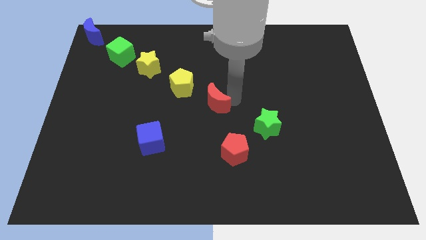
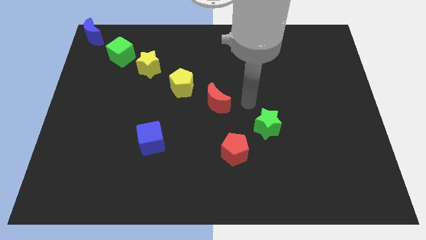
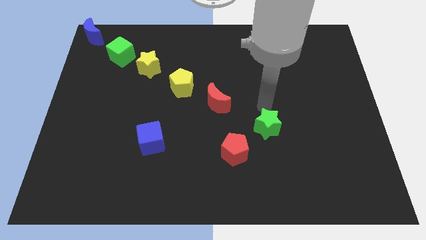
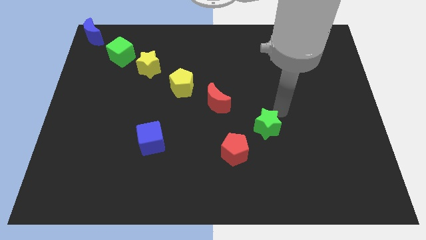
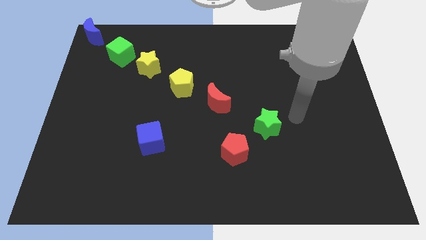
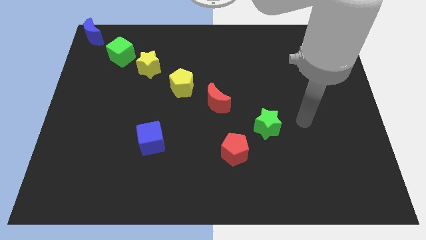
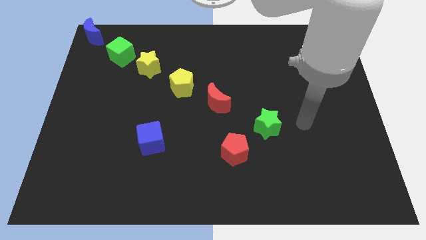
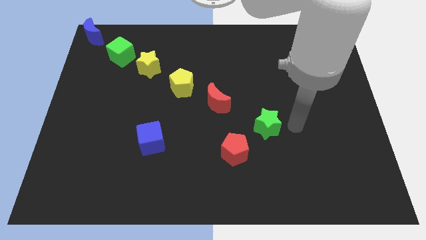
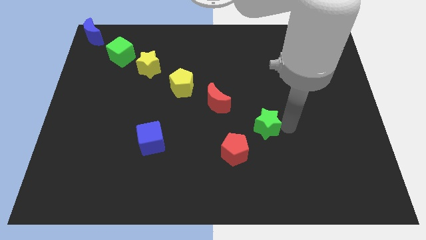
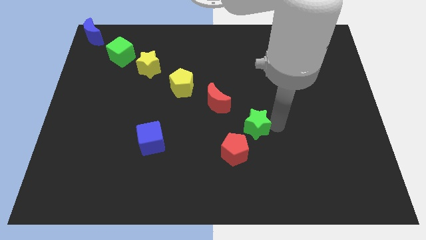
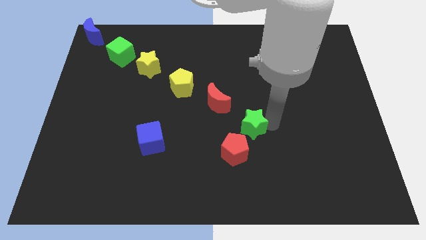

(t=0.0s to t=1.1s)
move the arm to the right of green star

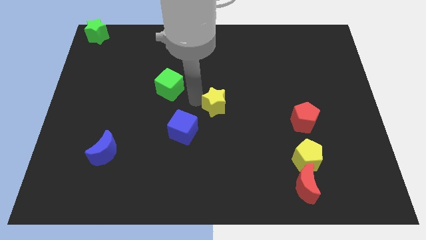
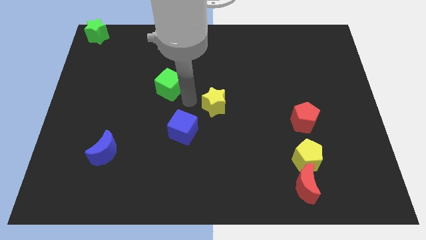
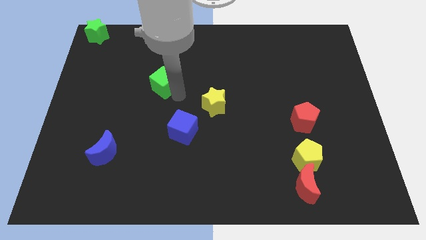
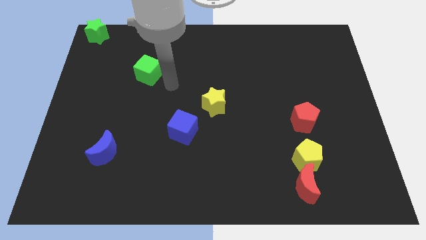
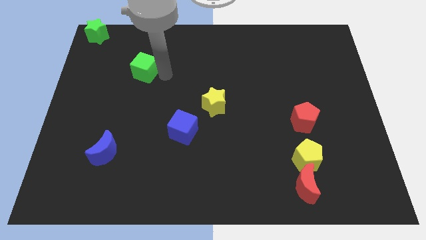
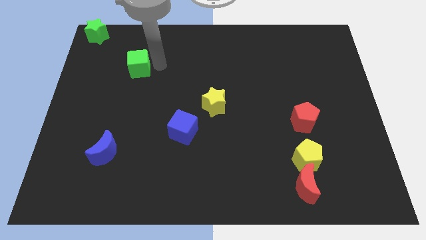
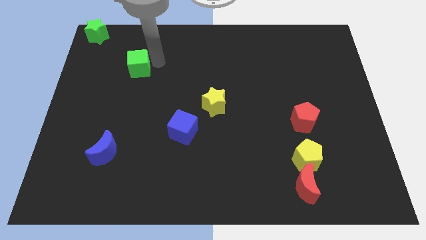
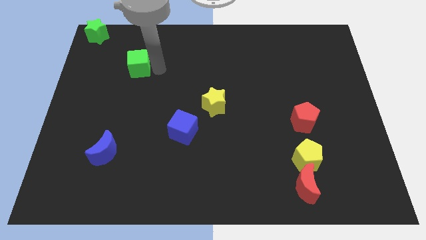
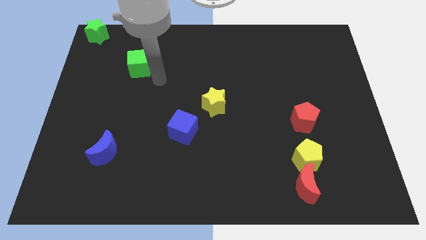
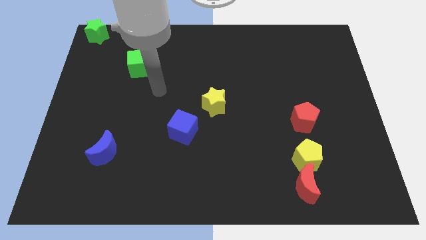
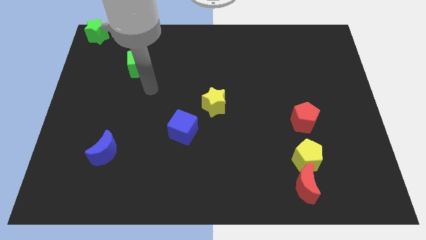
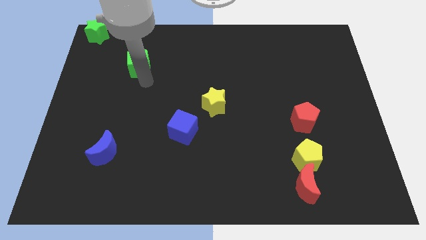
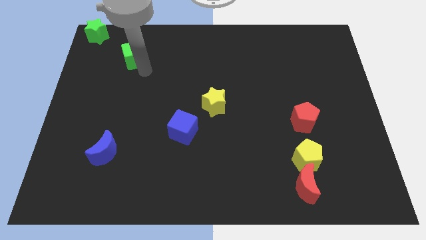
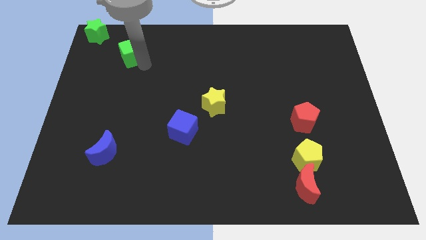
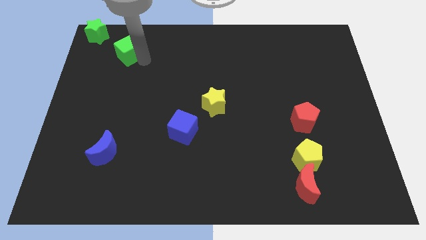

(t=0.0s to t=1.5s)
move the green cube diagonally right to the green star

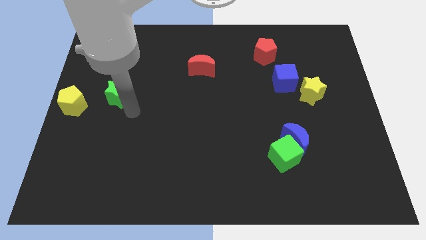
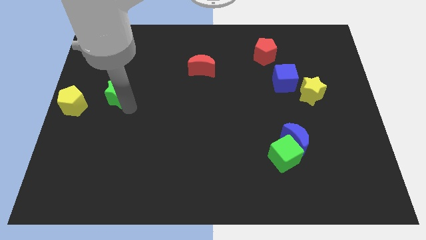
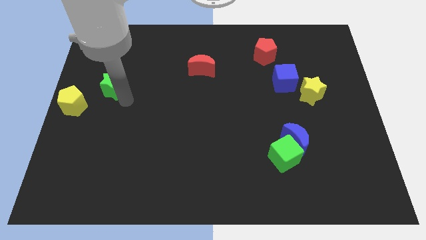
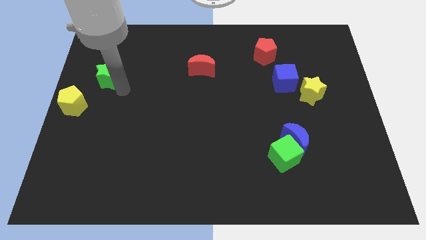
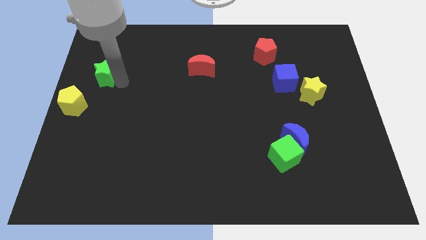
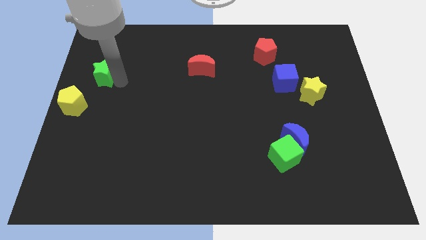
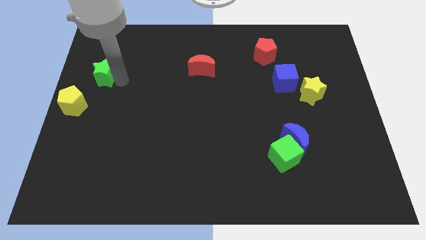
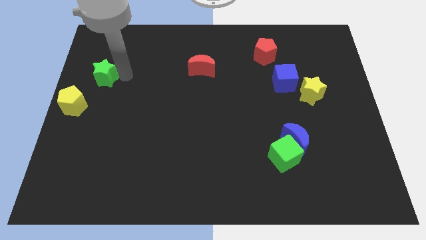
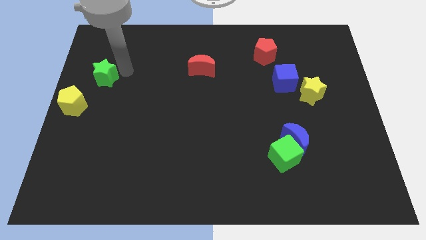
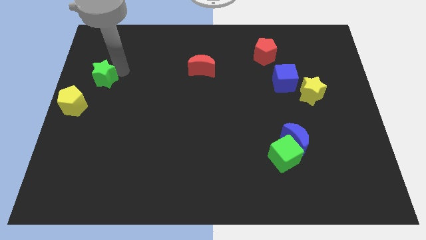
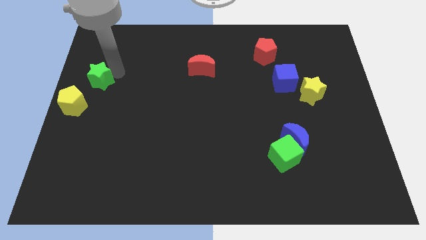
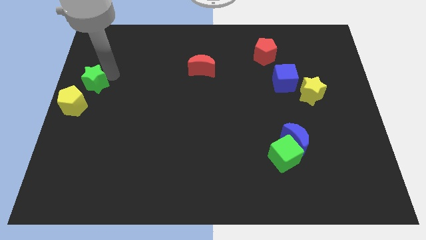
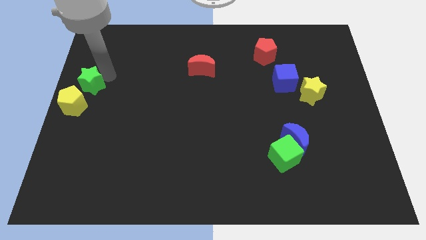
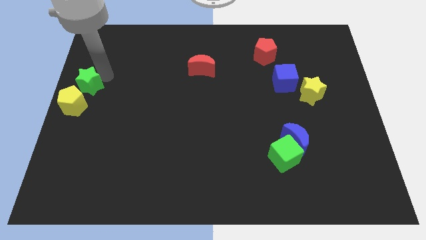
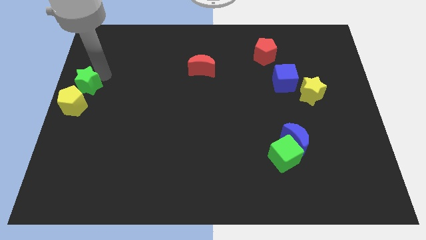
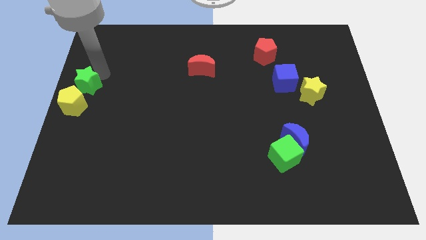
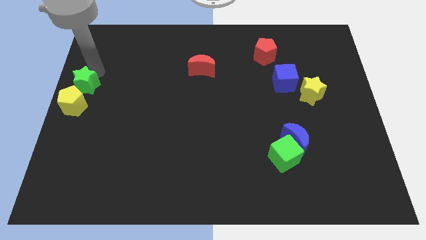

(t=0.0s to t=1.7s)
put the green star above the yellow pentagon

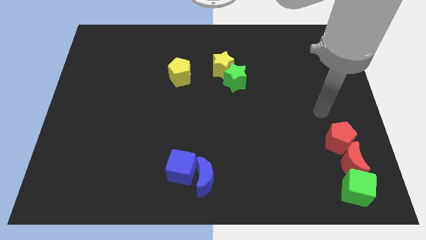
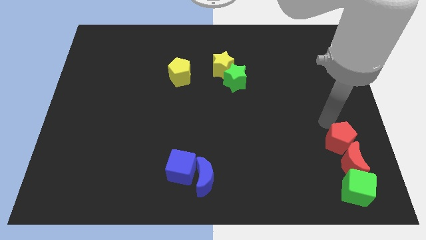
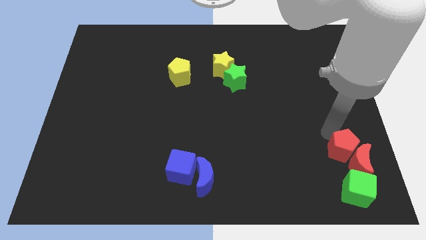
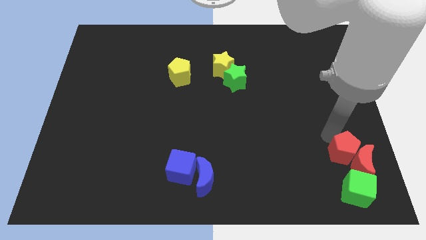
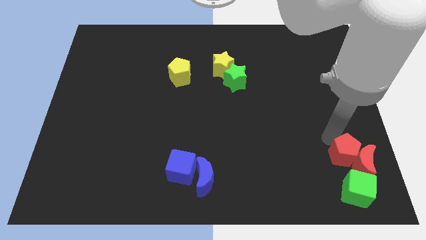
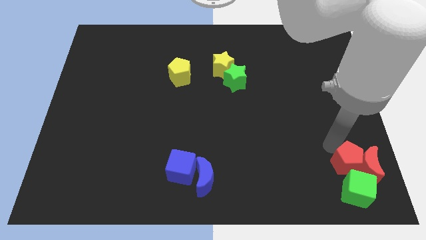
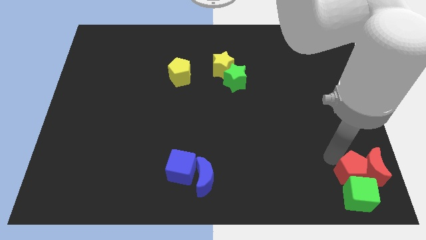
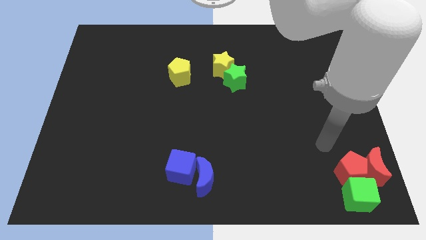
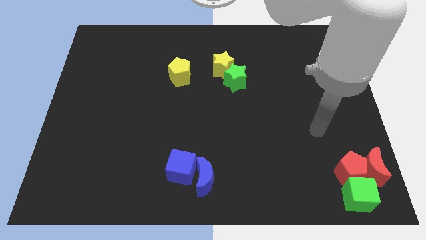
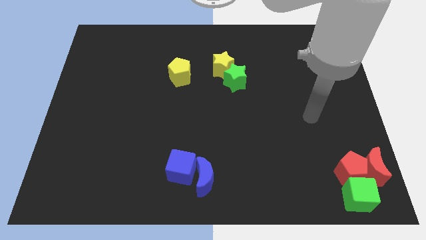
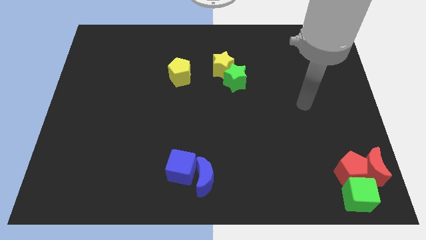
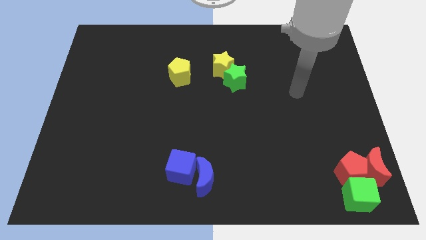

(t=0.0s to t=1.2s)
push the red pentagon into the green cube

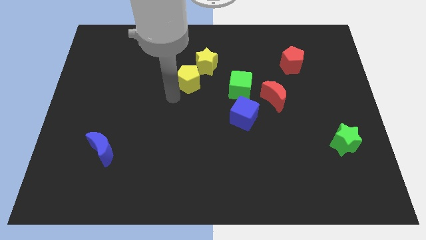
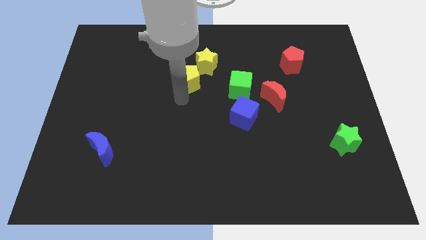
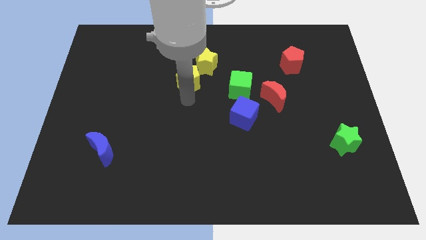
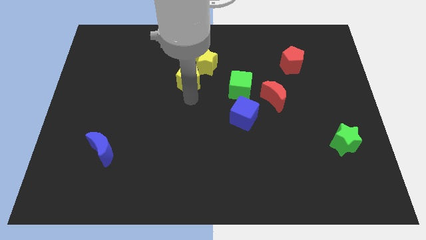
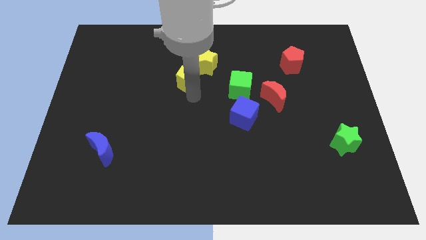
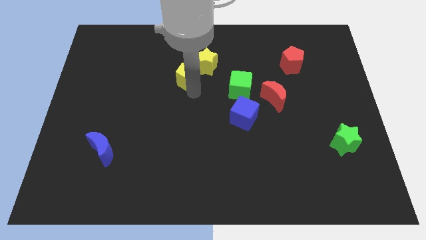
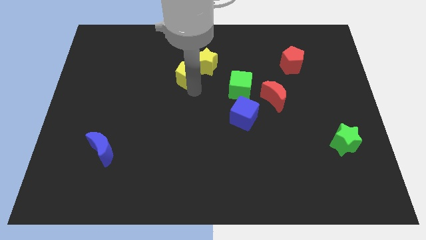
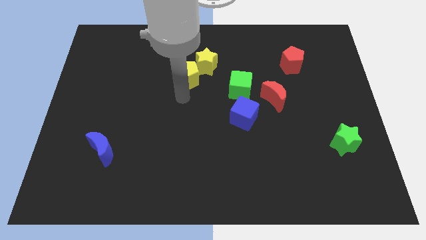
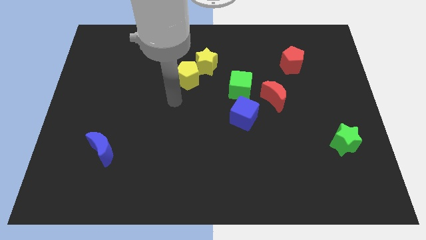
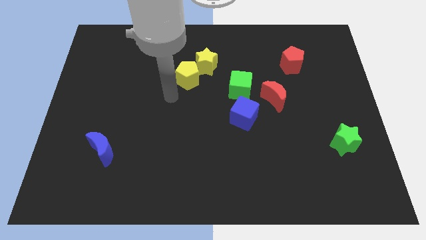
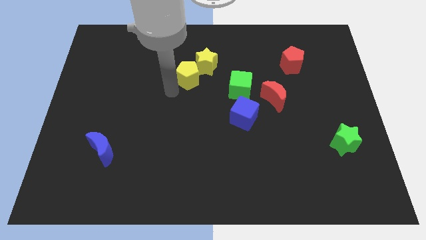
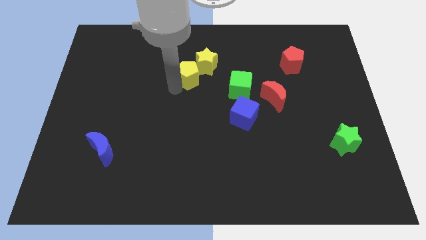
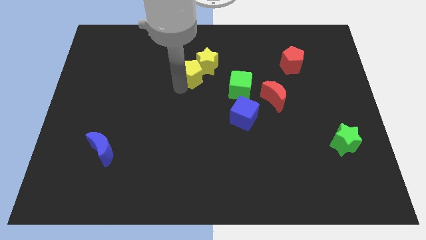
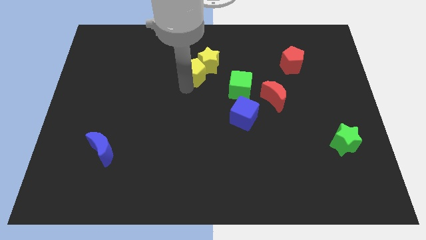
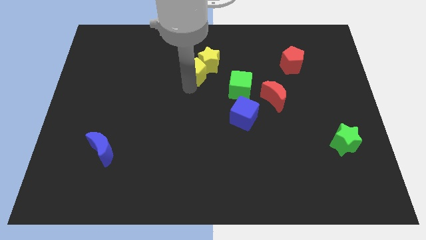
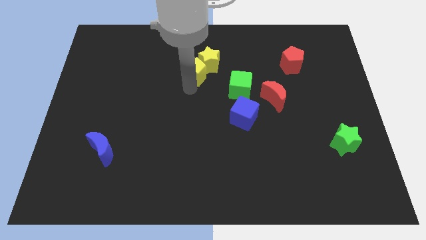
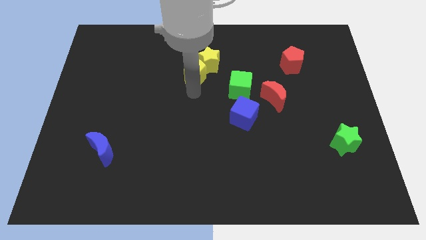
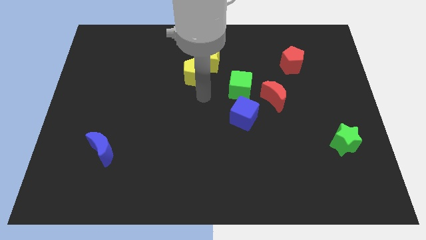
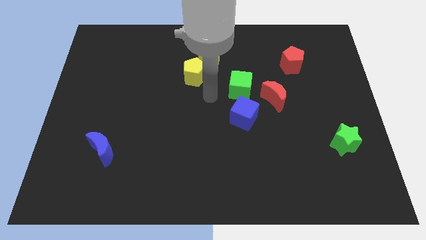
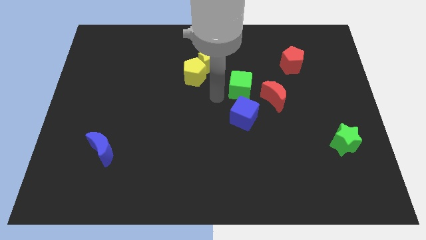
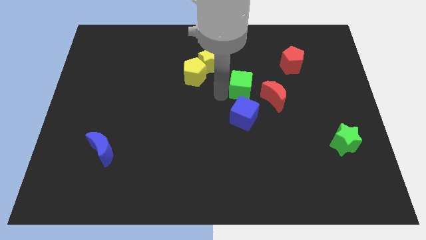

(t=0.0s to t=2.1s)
move the yellow pentagon into the yellow star

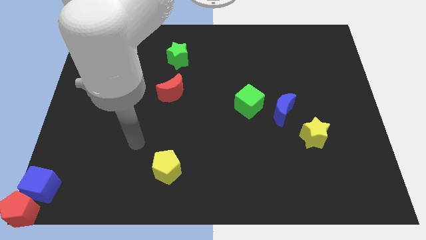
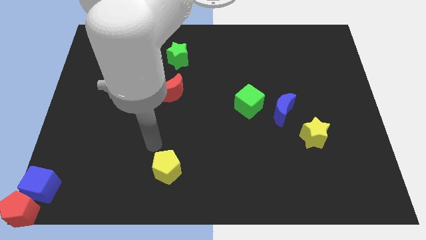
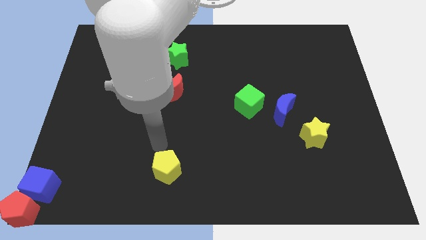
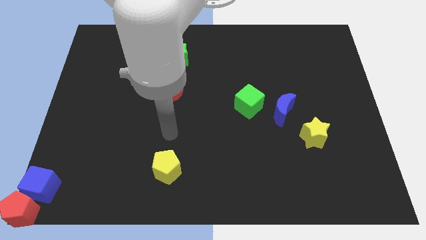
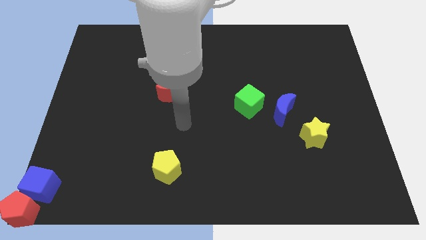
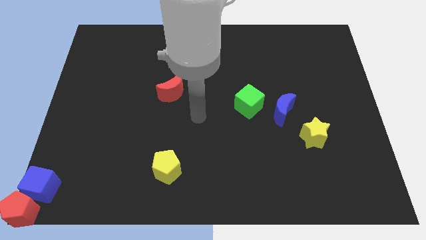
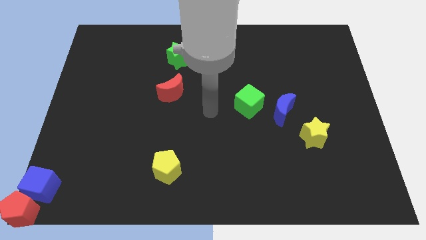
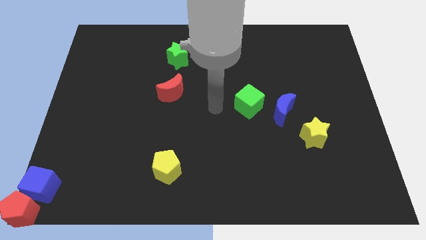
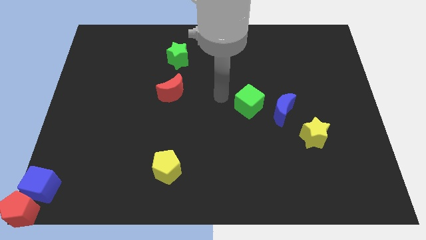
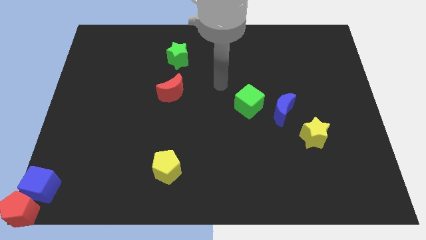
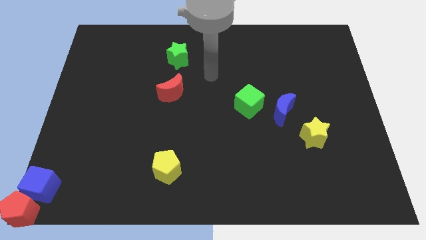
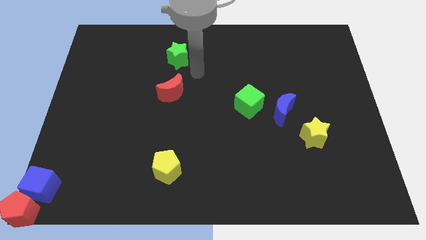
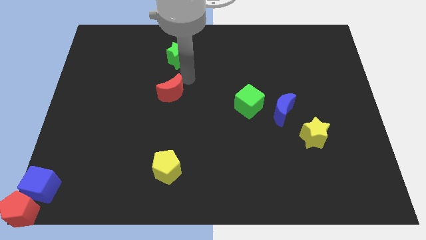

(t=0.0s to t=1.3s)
move arm to the top of red crescent
